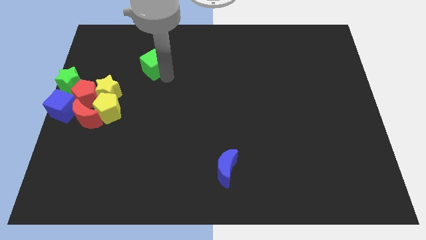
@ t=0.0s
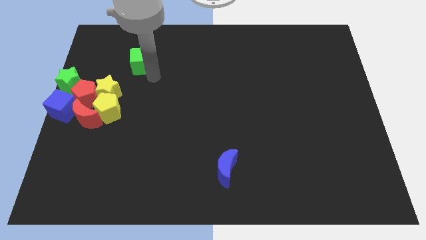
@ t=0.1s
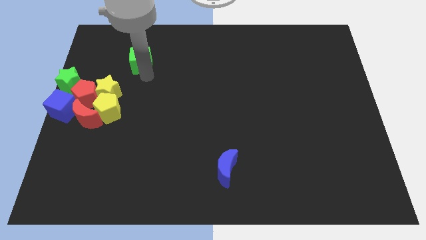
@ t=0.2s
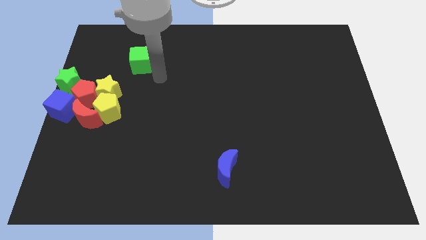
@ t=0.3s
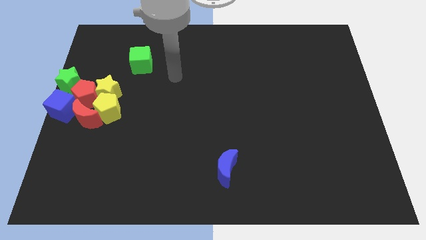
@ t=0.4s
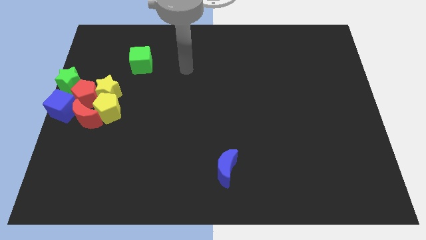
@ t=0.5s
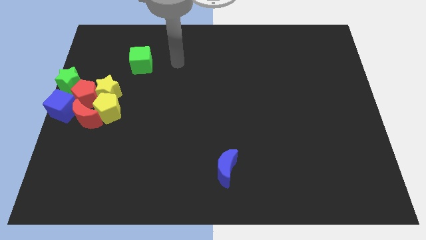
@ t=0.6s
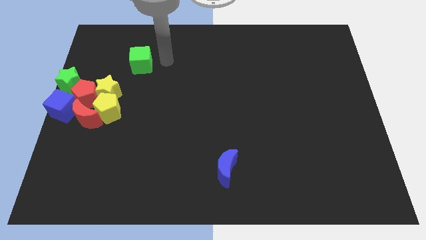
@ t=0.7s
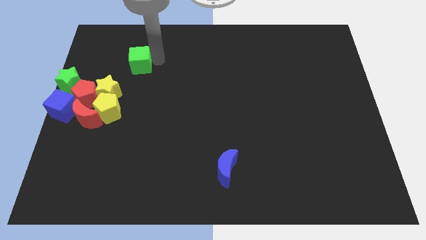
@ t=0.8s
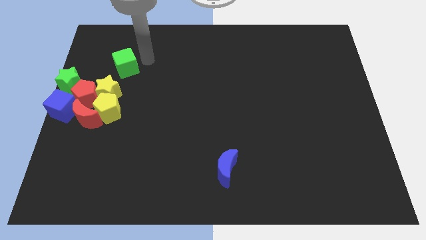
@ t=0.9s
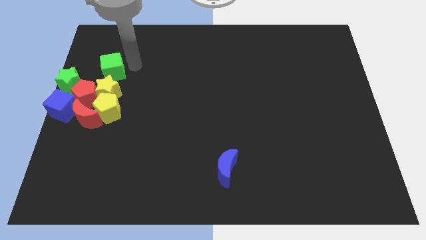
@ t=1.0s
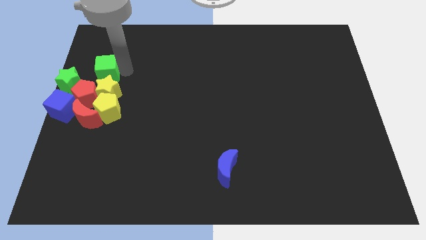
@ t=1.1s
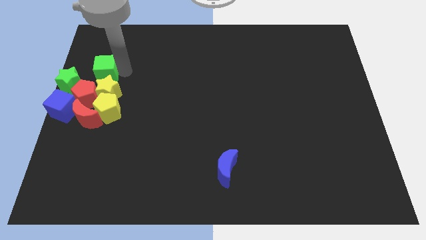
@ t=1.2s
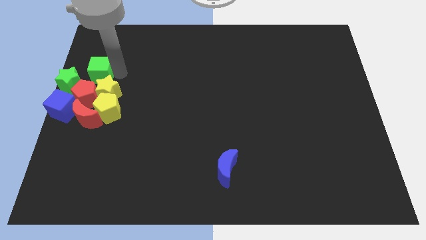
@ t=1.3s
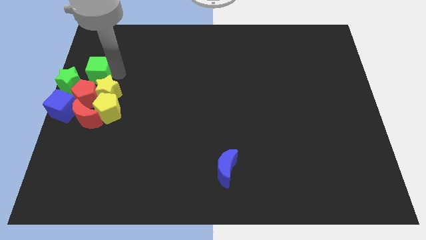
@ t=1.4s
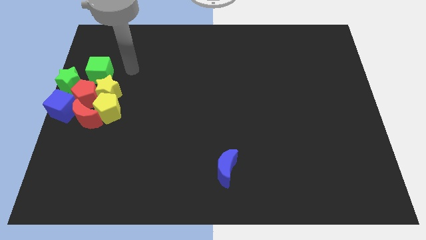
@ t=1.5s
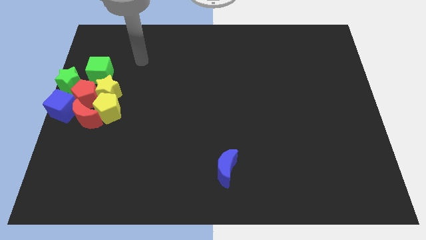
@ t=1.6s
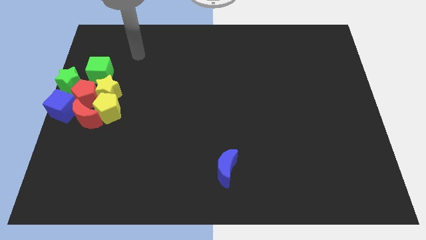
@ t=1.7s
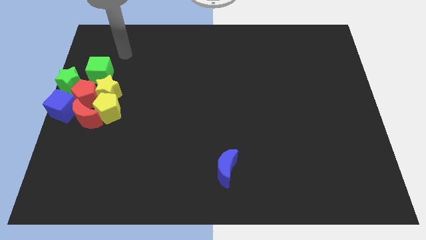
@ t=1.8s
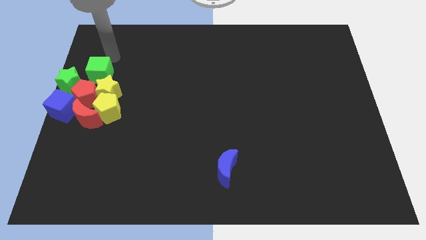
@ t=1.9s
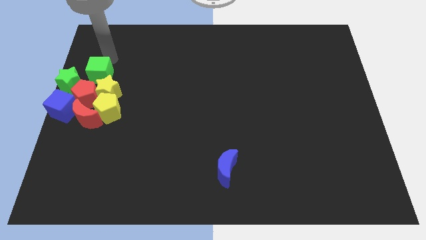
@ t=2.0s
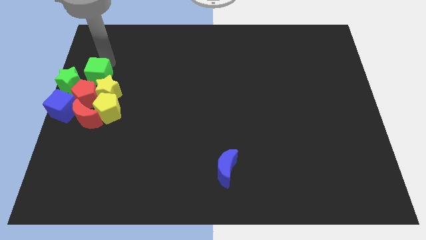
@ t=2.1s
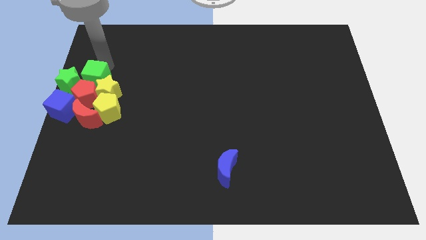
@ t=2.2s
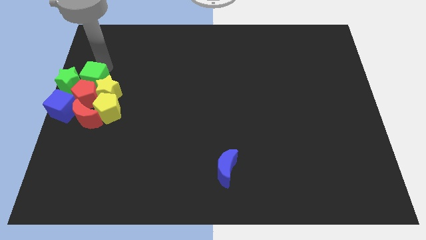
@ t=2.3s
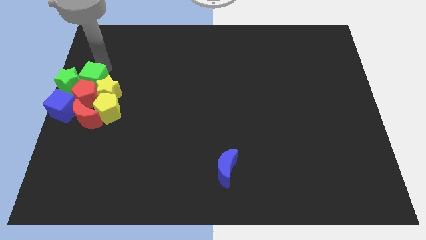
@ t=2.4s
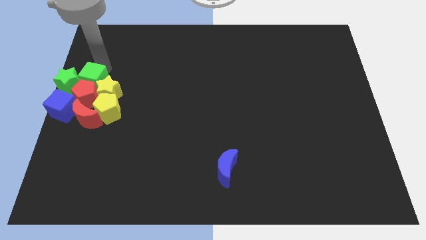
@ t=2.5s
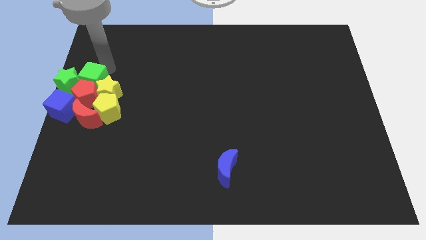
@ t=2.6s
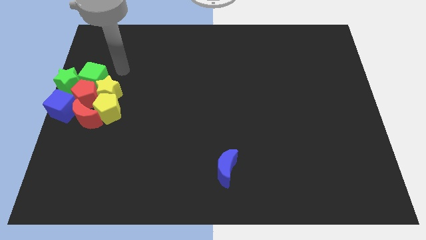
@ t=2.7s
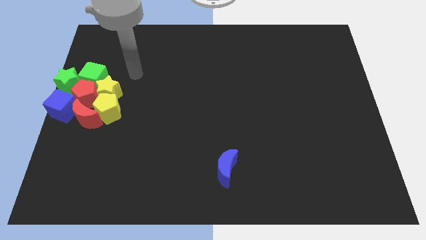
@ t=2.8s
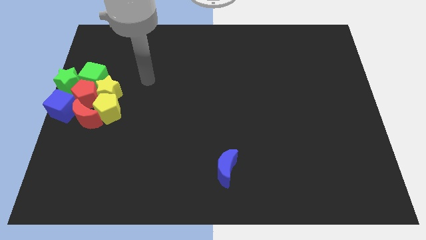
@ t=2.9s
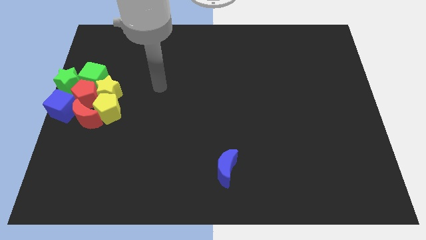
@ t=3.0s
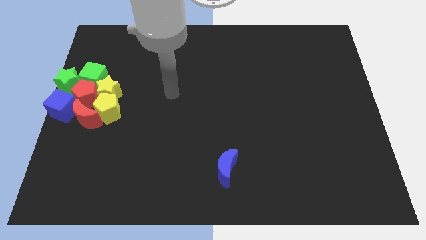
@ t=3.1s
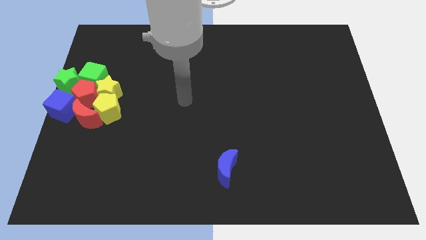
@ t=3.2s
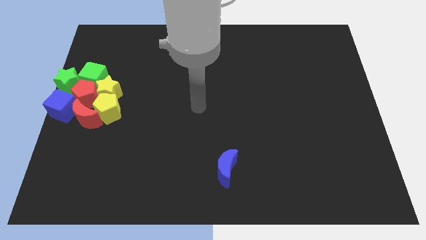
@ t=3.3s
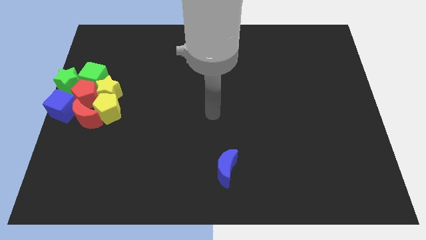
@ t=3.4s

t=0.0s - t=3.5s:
place the green cube in between the green star and yellow star

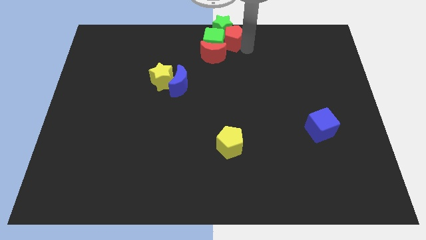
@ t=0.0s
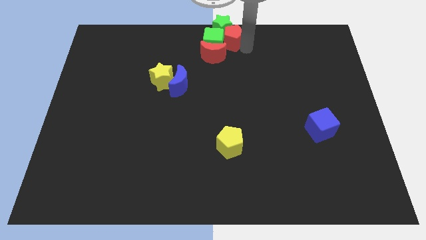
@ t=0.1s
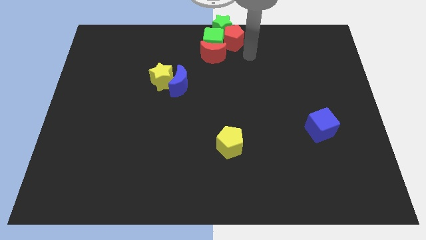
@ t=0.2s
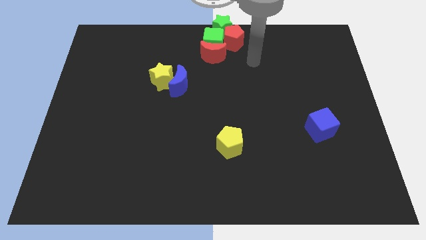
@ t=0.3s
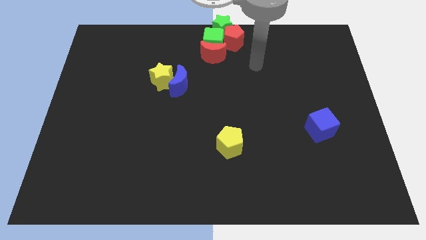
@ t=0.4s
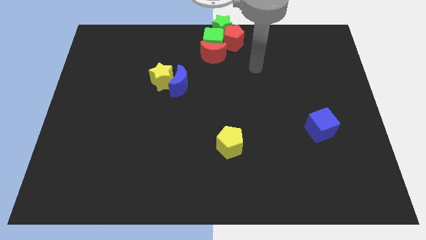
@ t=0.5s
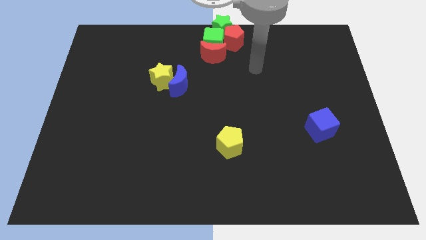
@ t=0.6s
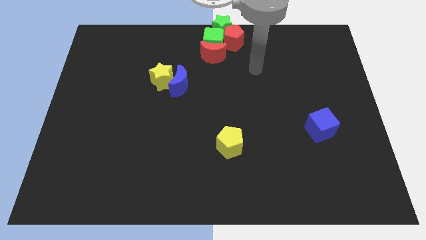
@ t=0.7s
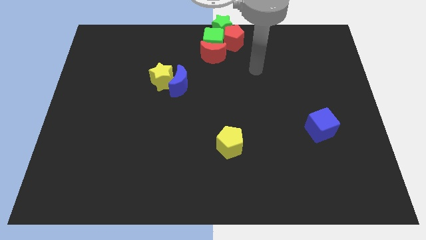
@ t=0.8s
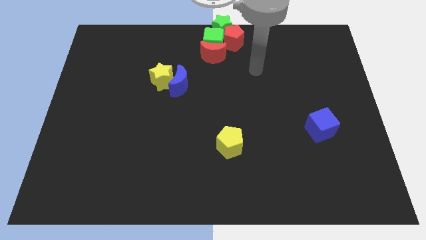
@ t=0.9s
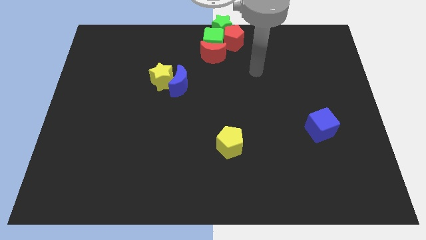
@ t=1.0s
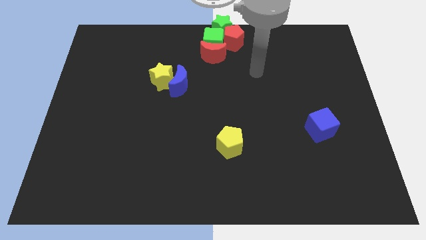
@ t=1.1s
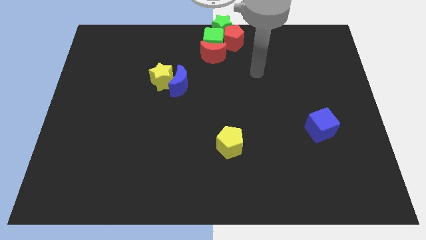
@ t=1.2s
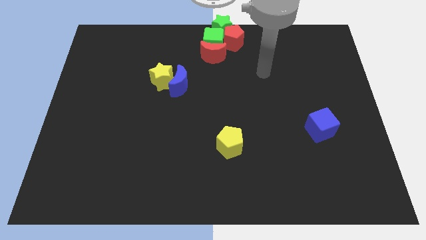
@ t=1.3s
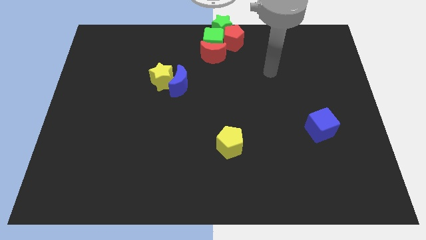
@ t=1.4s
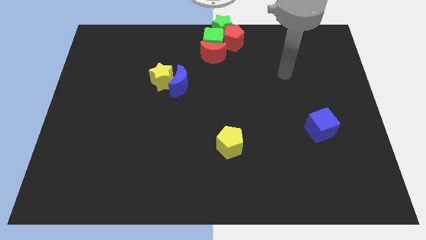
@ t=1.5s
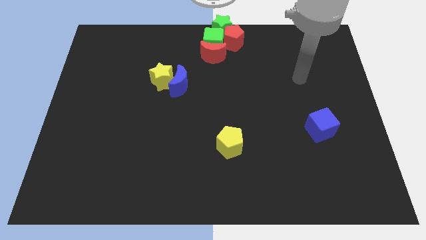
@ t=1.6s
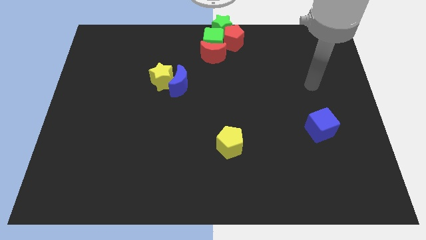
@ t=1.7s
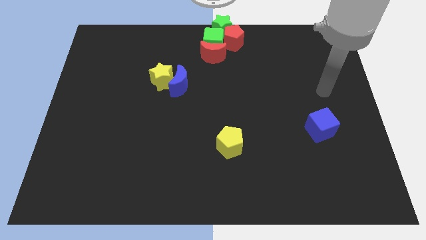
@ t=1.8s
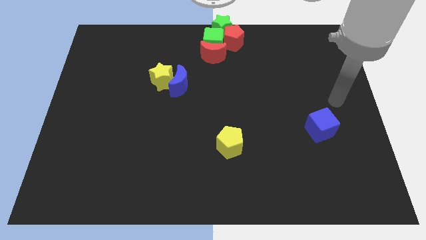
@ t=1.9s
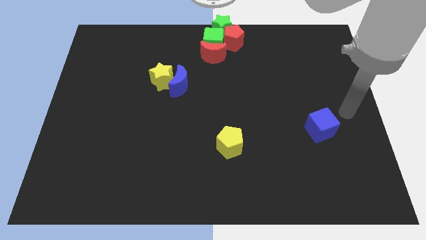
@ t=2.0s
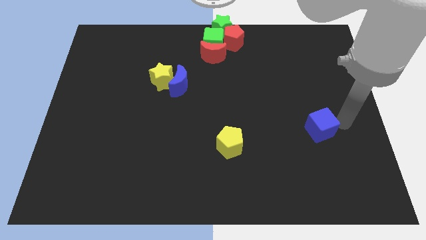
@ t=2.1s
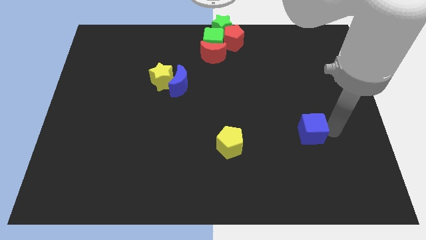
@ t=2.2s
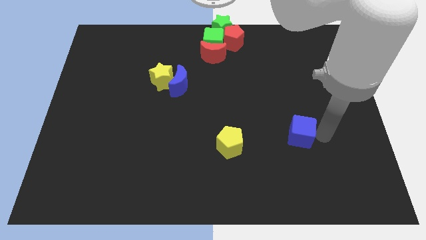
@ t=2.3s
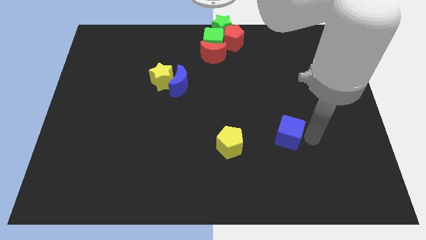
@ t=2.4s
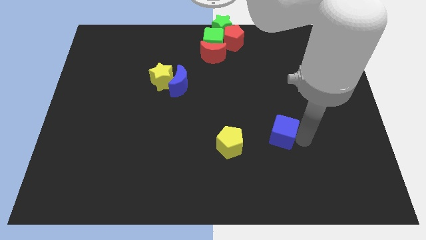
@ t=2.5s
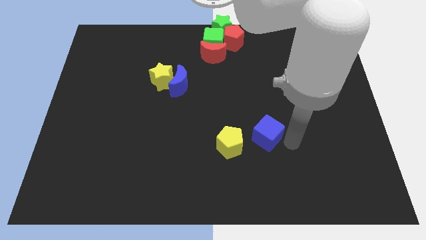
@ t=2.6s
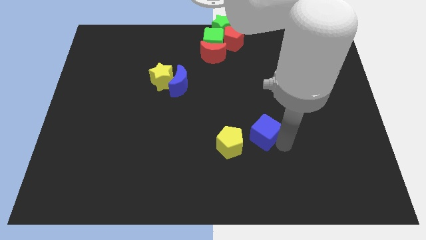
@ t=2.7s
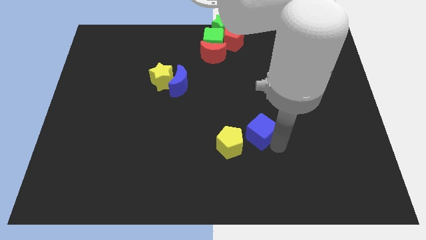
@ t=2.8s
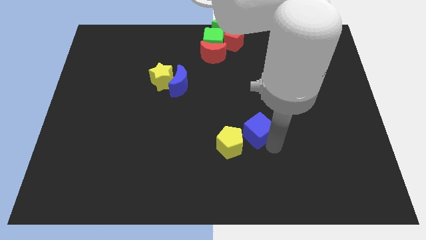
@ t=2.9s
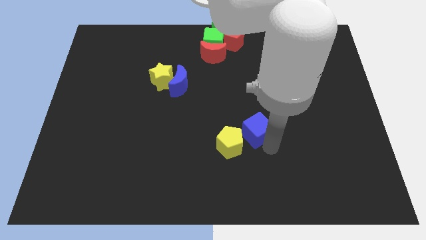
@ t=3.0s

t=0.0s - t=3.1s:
place blue cube into the yellow pentagon

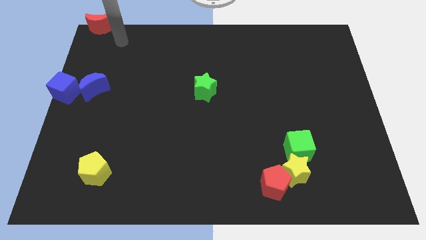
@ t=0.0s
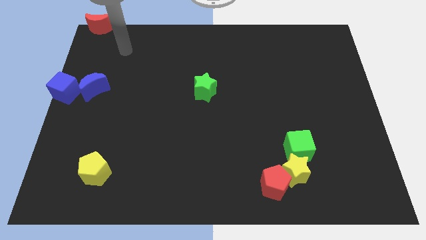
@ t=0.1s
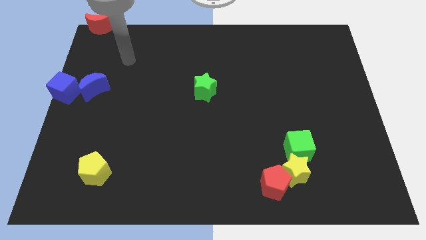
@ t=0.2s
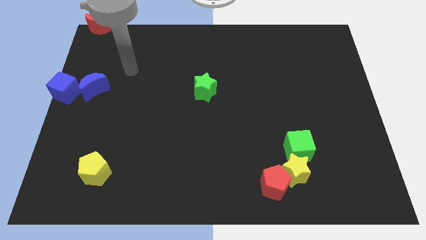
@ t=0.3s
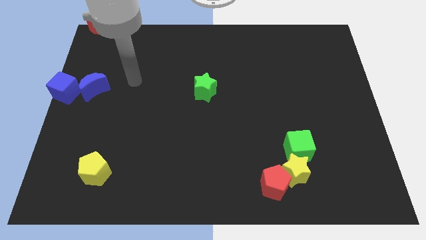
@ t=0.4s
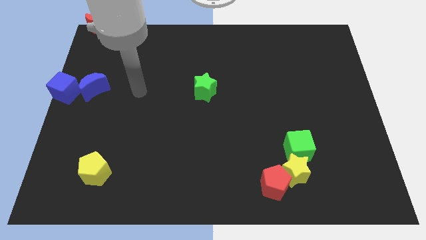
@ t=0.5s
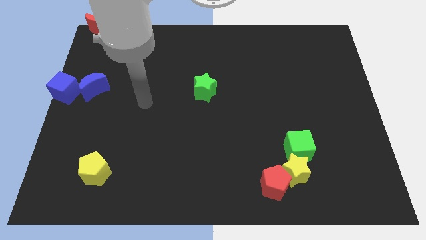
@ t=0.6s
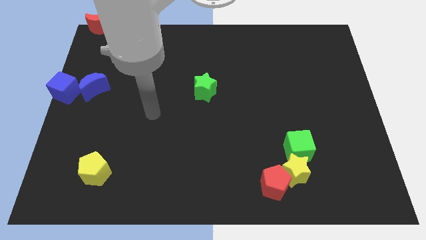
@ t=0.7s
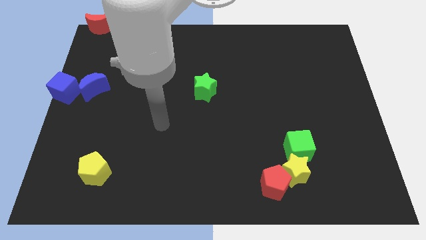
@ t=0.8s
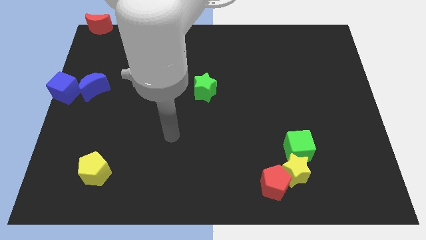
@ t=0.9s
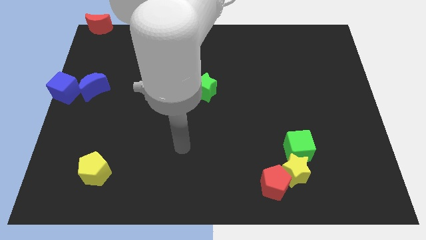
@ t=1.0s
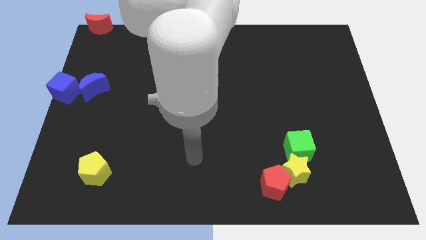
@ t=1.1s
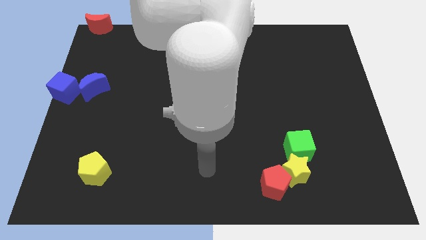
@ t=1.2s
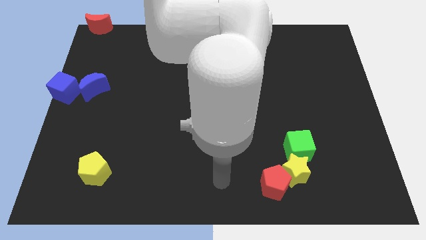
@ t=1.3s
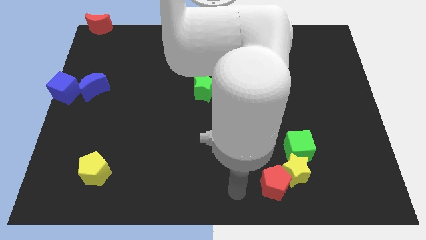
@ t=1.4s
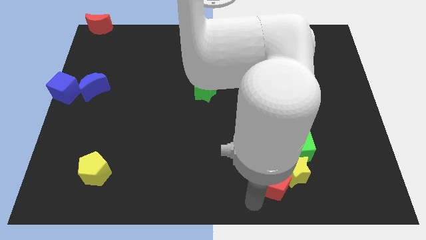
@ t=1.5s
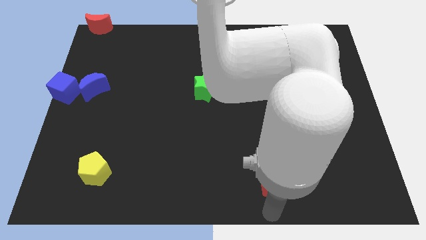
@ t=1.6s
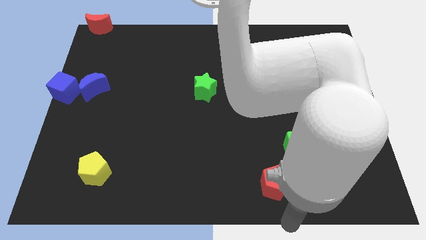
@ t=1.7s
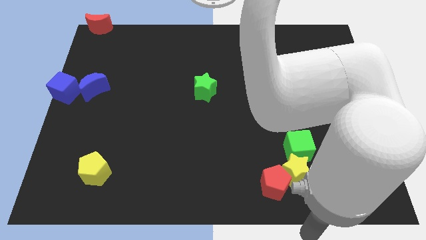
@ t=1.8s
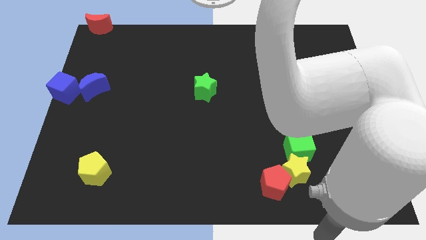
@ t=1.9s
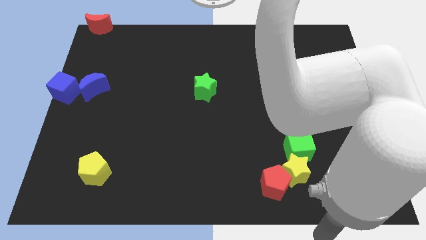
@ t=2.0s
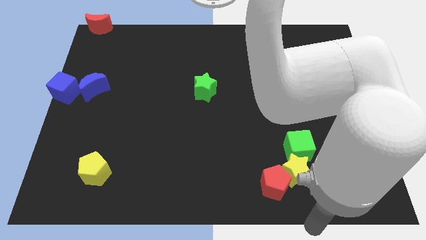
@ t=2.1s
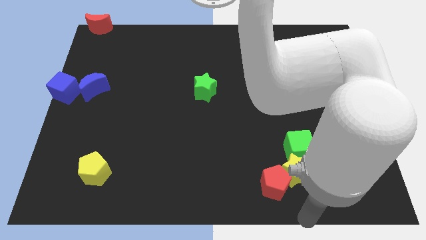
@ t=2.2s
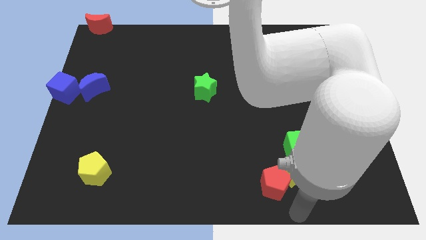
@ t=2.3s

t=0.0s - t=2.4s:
point your arm below the red pentagon at the bottom
